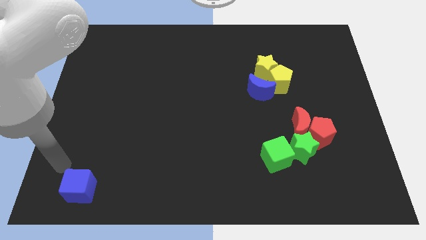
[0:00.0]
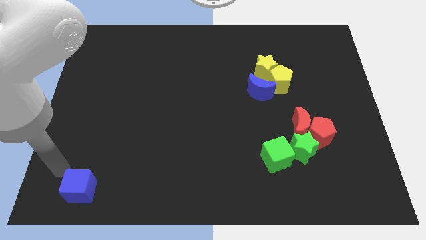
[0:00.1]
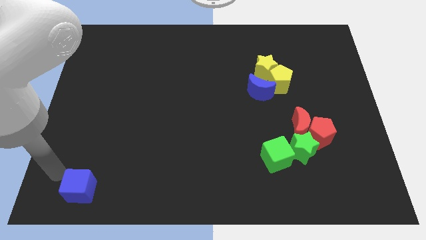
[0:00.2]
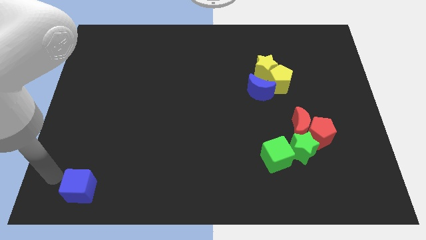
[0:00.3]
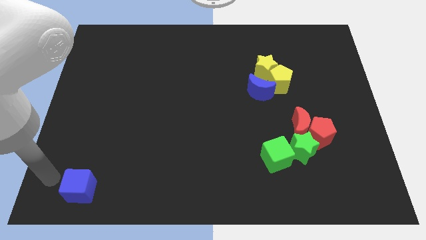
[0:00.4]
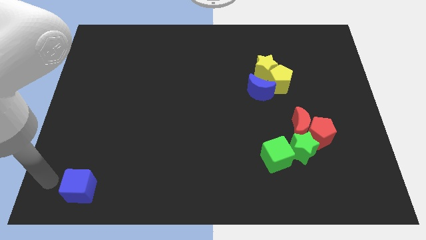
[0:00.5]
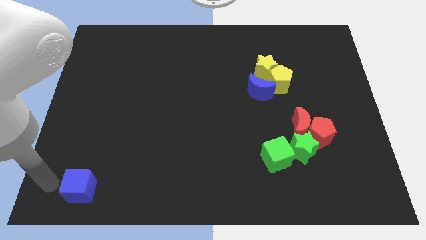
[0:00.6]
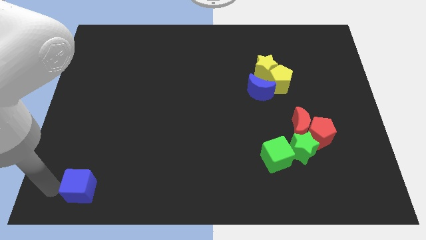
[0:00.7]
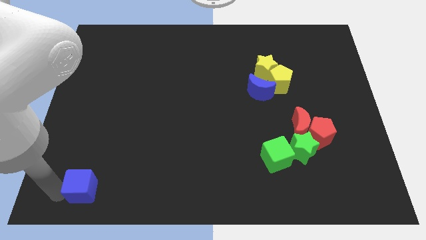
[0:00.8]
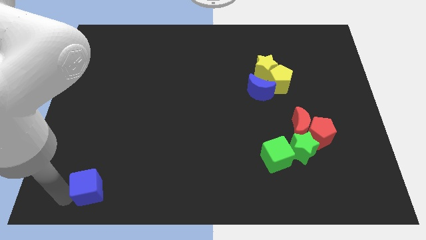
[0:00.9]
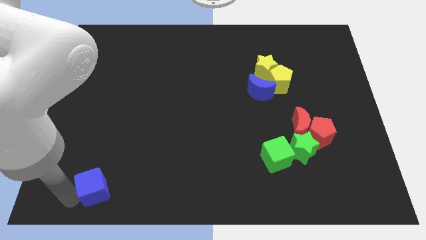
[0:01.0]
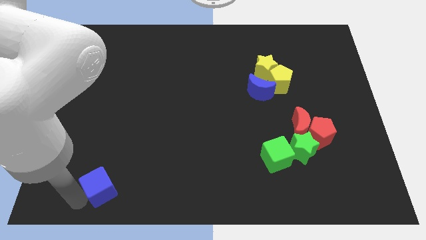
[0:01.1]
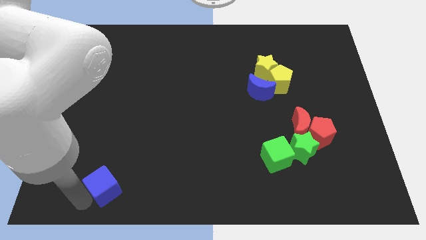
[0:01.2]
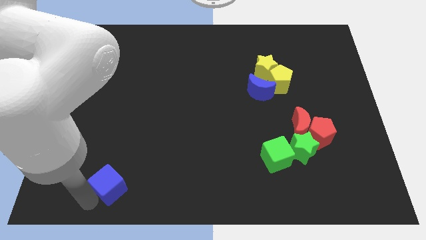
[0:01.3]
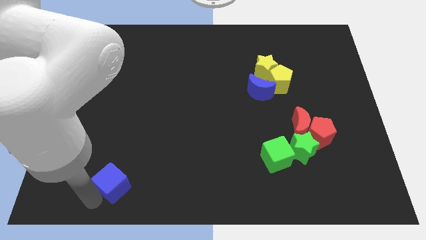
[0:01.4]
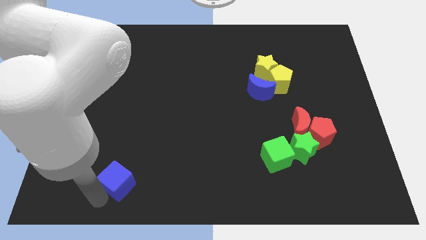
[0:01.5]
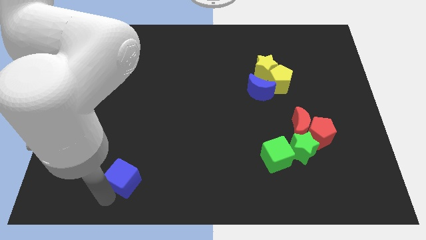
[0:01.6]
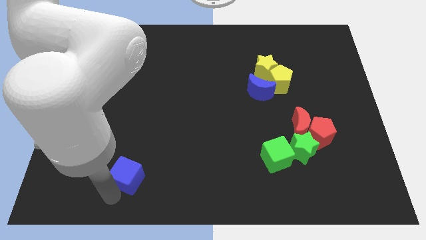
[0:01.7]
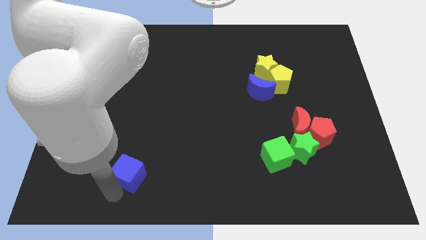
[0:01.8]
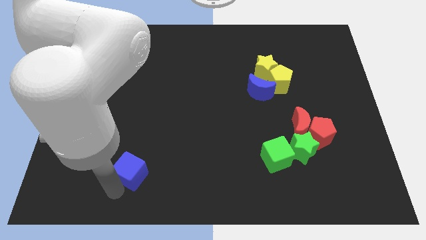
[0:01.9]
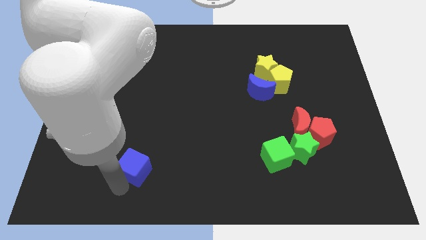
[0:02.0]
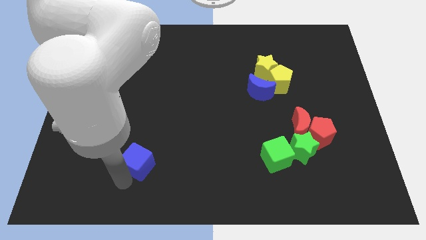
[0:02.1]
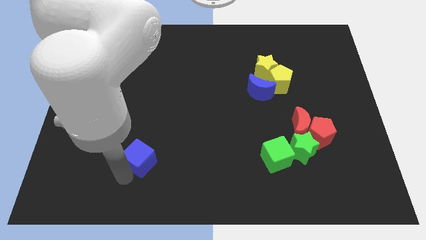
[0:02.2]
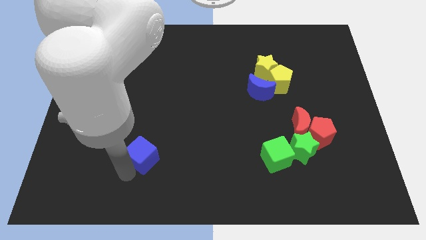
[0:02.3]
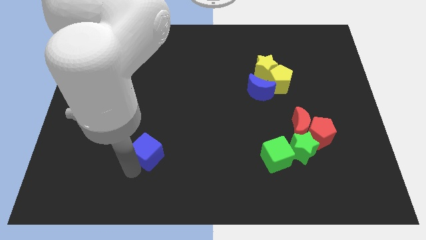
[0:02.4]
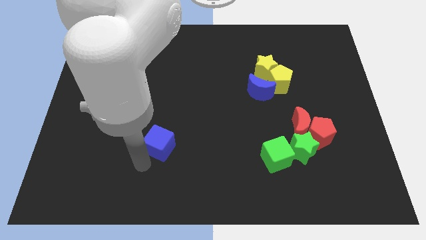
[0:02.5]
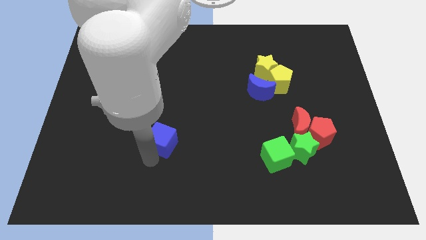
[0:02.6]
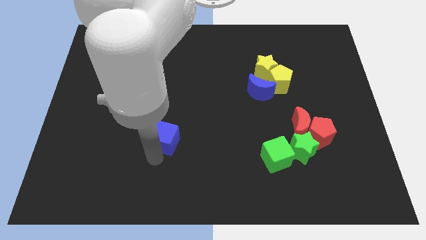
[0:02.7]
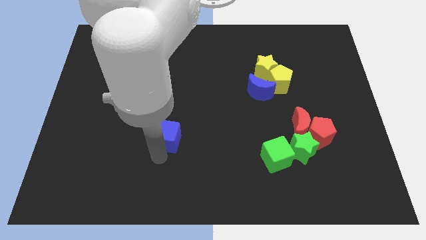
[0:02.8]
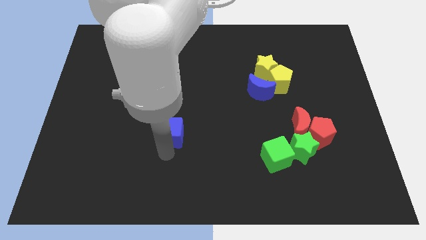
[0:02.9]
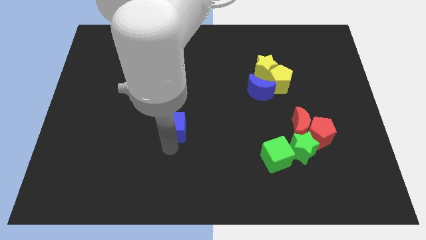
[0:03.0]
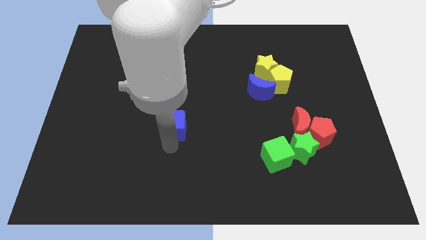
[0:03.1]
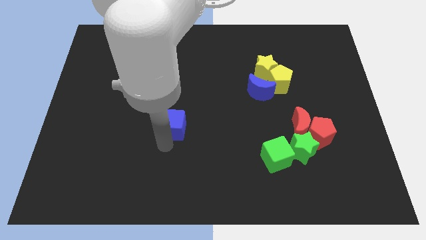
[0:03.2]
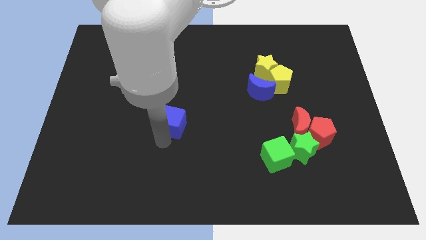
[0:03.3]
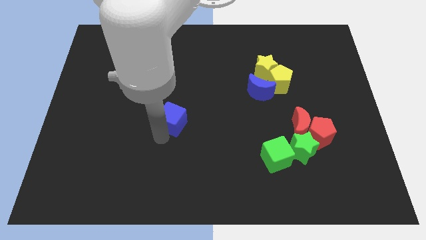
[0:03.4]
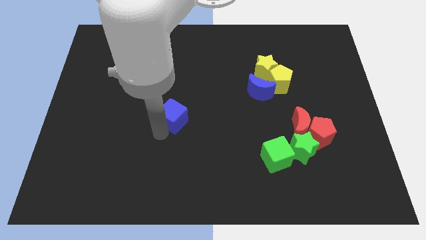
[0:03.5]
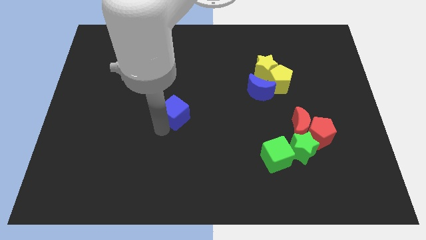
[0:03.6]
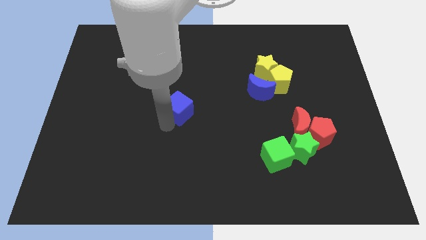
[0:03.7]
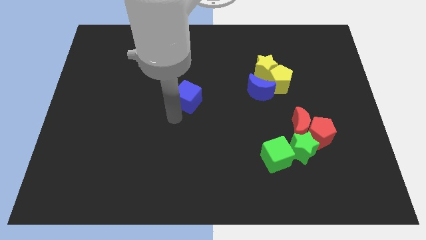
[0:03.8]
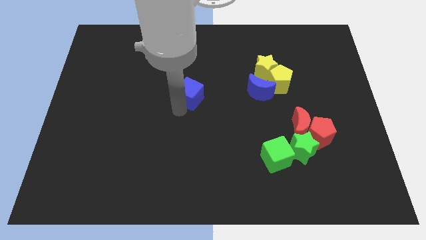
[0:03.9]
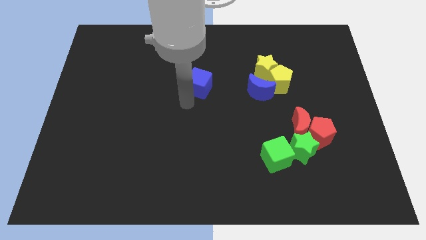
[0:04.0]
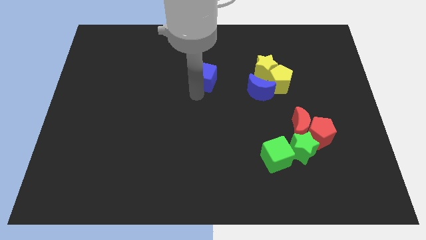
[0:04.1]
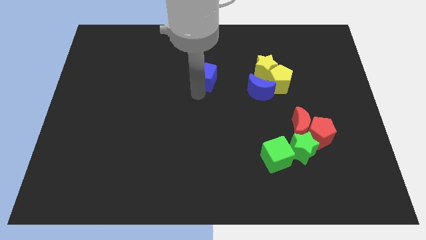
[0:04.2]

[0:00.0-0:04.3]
move the blue cube to the center

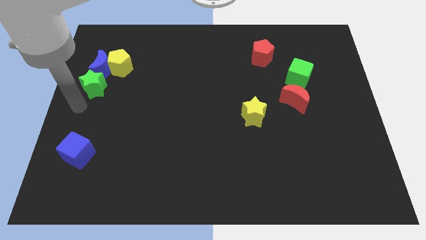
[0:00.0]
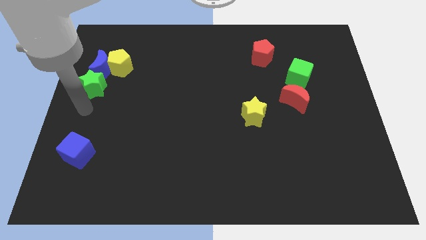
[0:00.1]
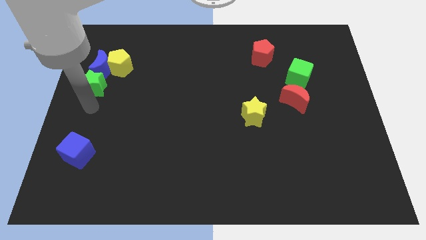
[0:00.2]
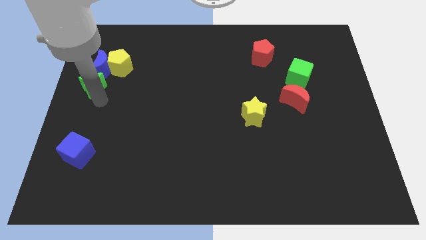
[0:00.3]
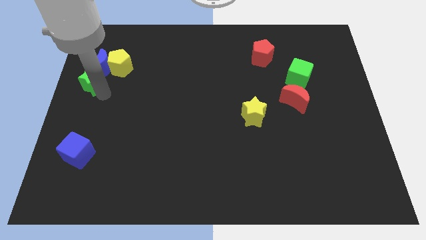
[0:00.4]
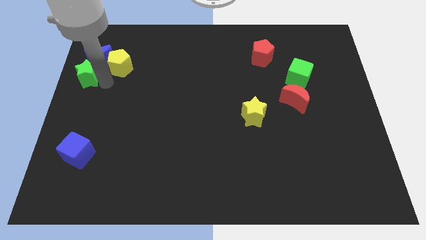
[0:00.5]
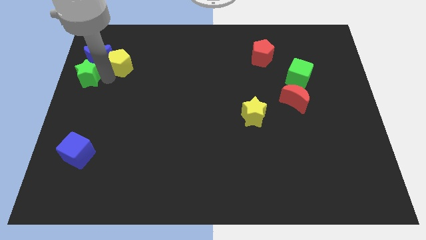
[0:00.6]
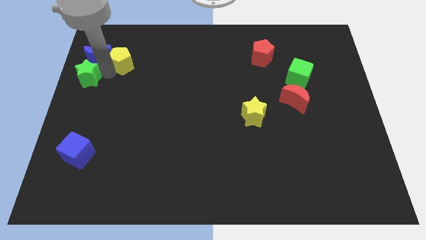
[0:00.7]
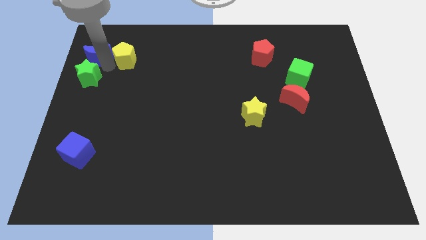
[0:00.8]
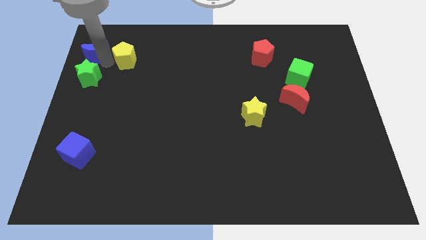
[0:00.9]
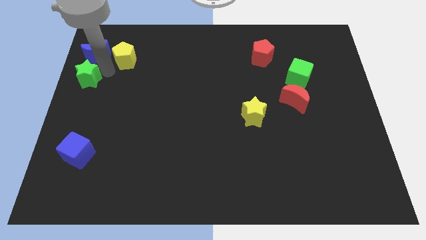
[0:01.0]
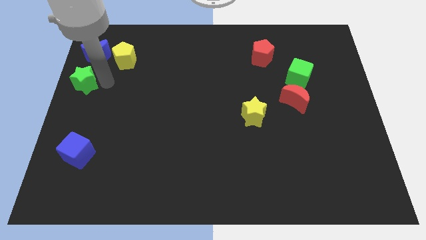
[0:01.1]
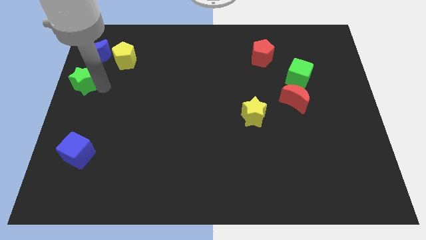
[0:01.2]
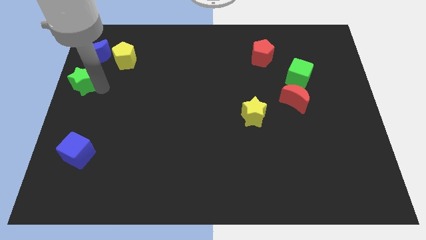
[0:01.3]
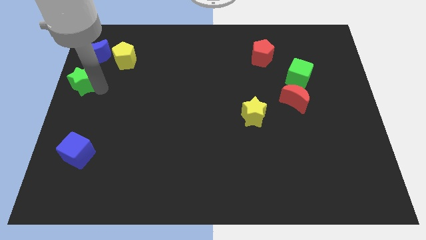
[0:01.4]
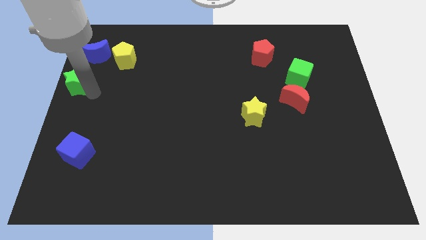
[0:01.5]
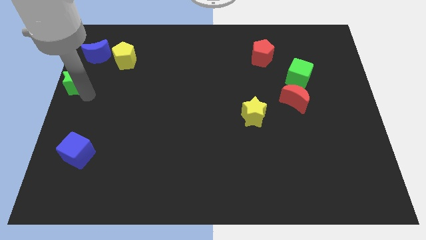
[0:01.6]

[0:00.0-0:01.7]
separate blue crescent from green star

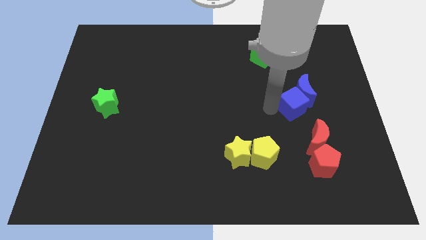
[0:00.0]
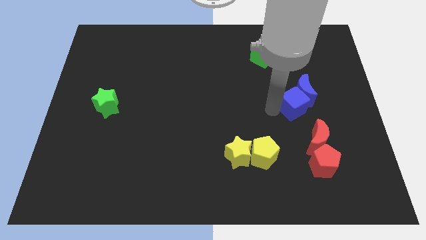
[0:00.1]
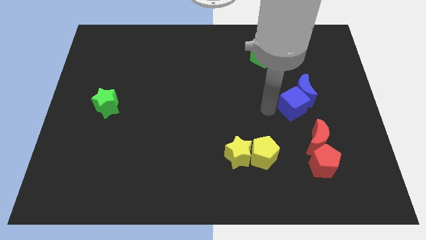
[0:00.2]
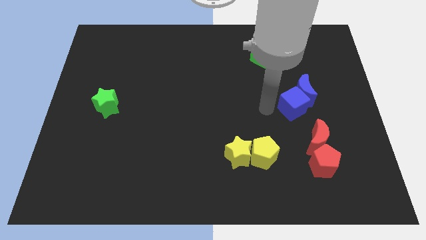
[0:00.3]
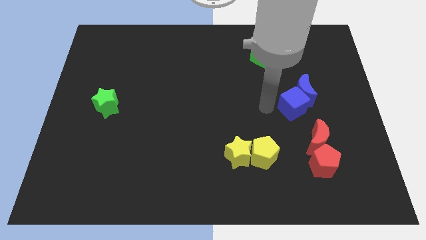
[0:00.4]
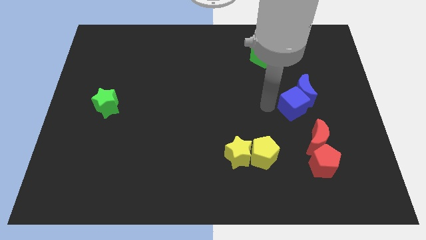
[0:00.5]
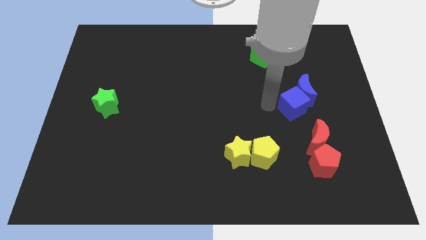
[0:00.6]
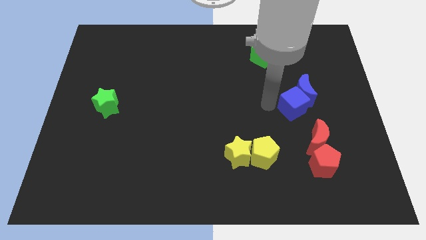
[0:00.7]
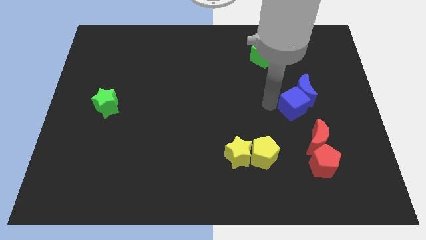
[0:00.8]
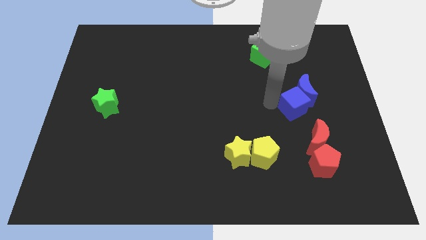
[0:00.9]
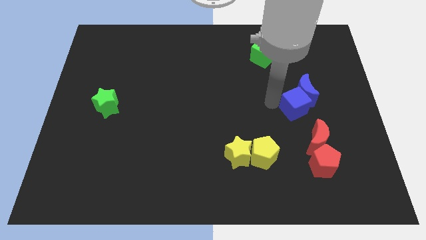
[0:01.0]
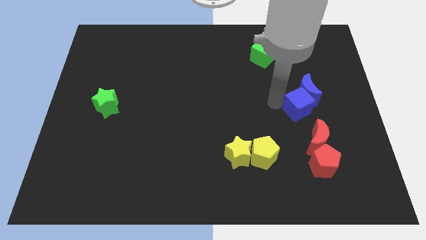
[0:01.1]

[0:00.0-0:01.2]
slightly touch the blue cube

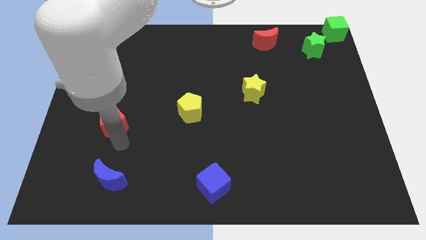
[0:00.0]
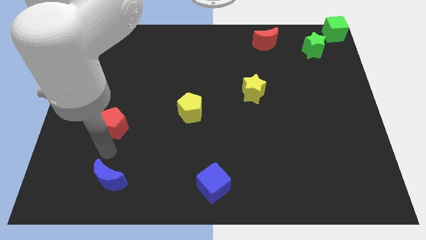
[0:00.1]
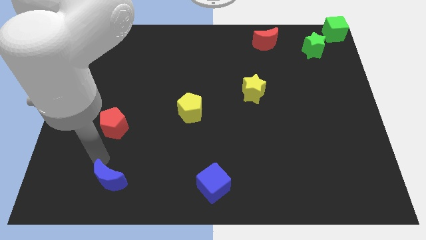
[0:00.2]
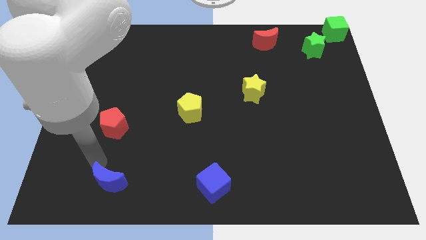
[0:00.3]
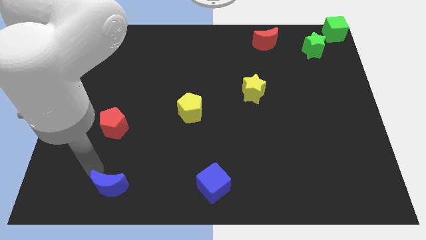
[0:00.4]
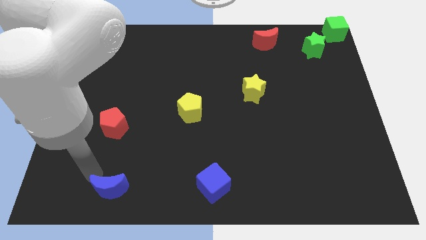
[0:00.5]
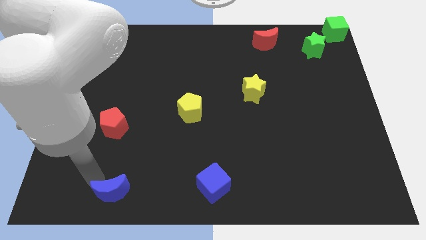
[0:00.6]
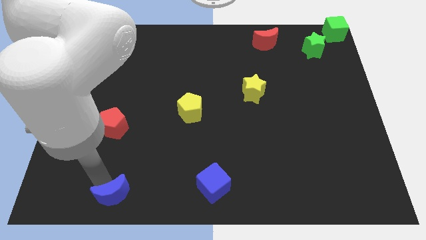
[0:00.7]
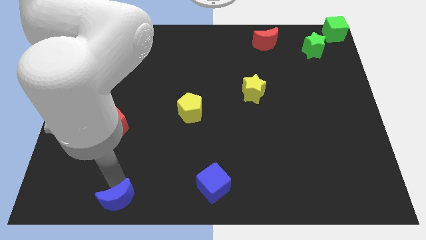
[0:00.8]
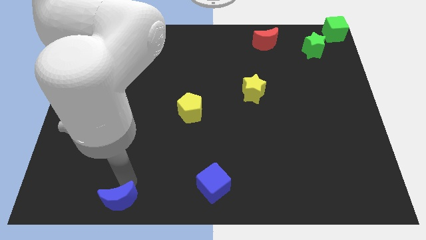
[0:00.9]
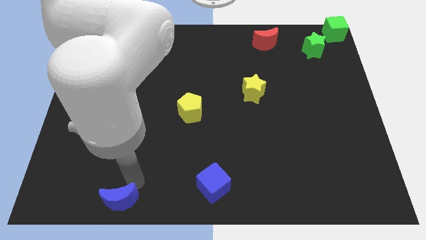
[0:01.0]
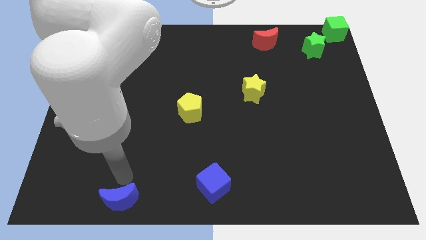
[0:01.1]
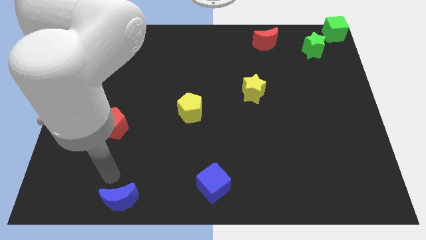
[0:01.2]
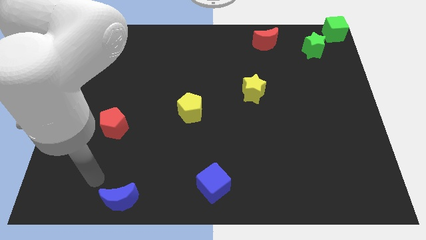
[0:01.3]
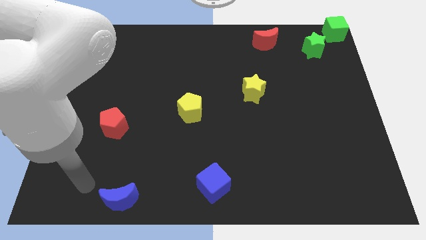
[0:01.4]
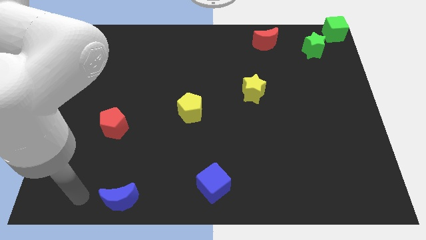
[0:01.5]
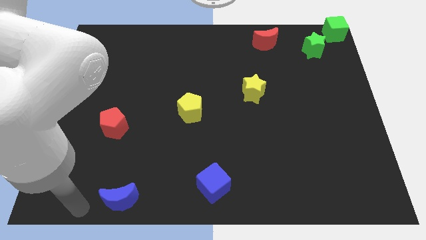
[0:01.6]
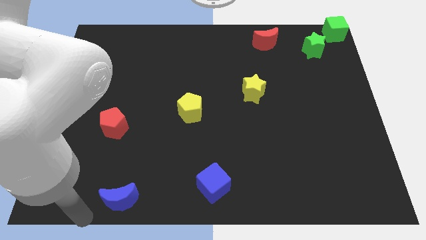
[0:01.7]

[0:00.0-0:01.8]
push slightly to the blue crescent
